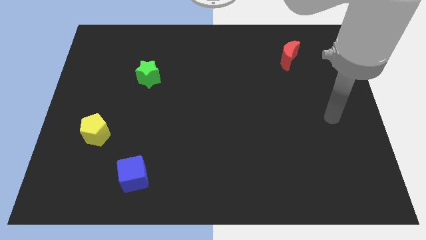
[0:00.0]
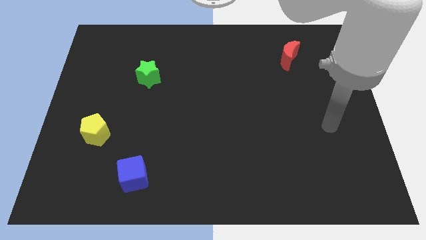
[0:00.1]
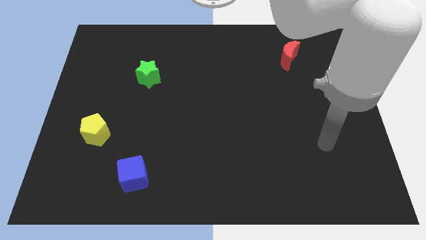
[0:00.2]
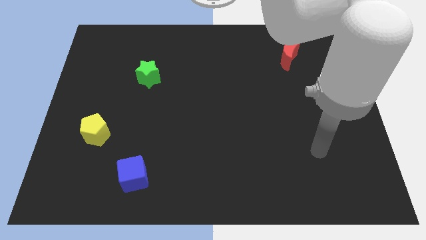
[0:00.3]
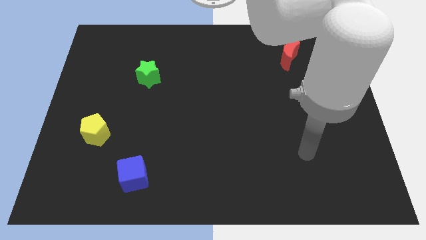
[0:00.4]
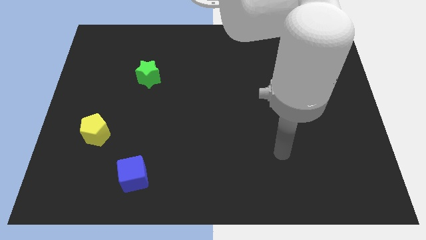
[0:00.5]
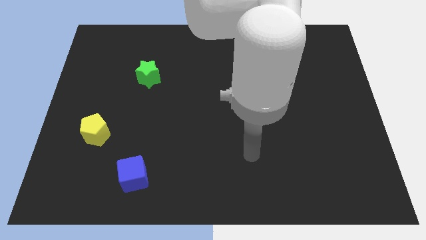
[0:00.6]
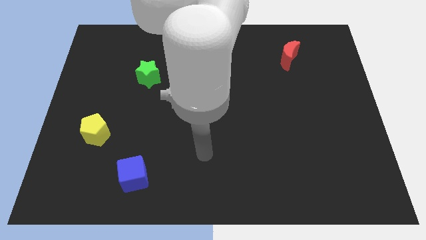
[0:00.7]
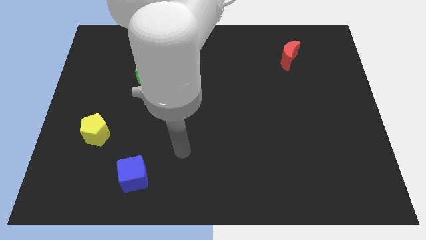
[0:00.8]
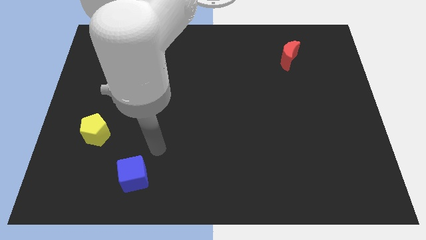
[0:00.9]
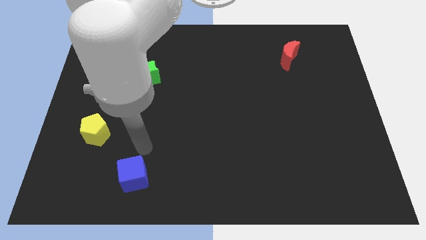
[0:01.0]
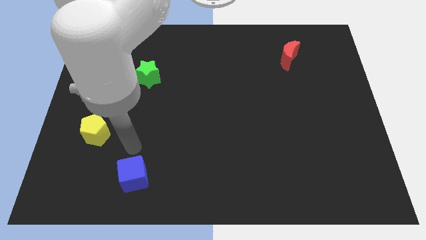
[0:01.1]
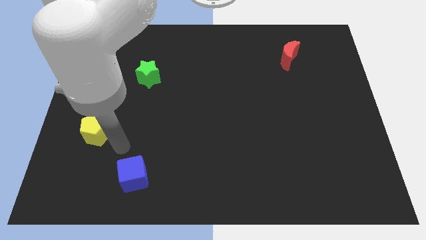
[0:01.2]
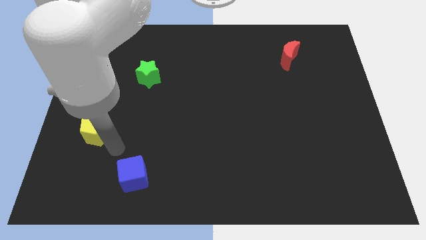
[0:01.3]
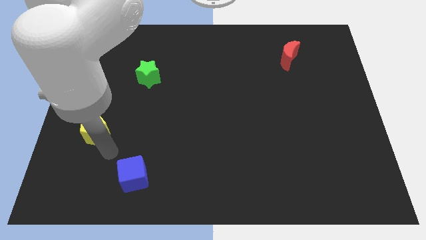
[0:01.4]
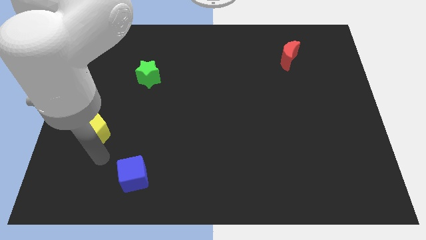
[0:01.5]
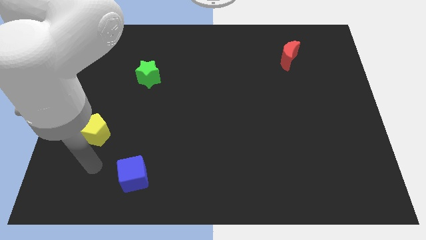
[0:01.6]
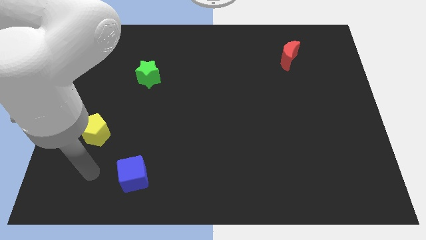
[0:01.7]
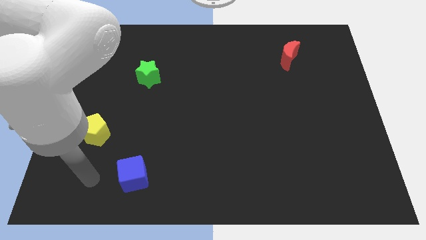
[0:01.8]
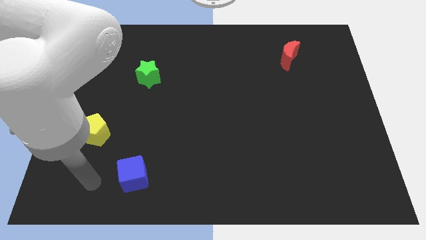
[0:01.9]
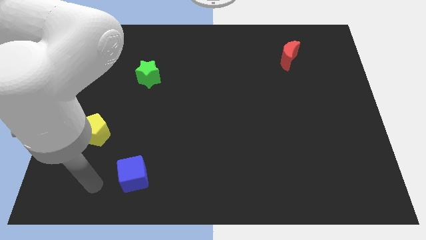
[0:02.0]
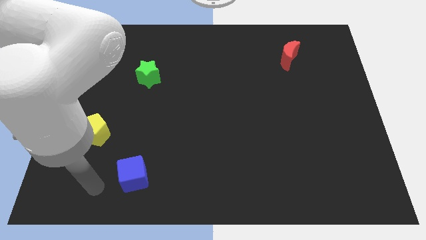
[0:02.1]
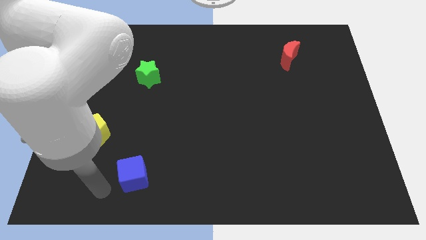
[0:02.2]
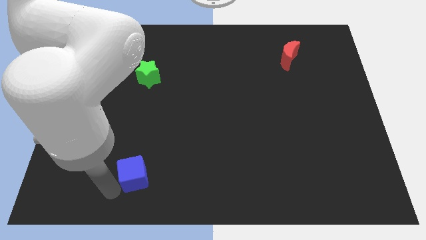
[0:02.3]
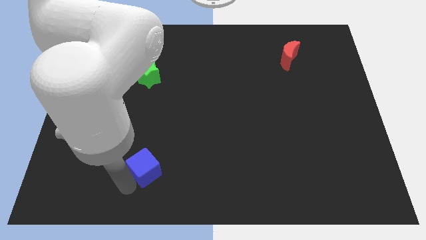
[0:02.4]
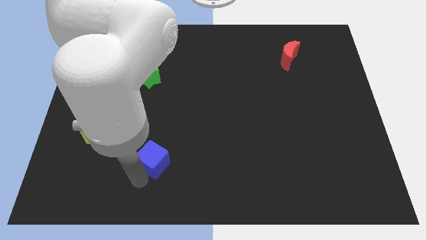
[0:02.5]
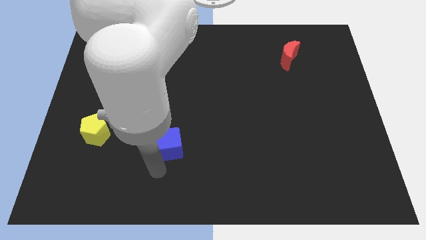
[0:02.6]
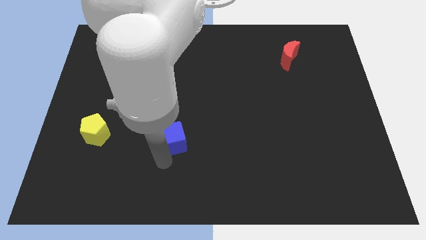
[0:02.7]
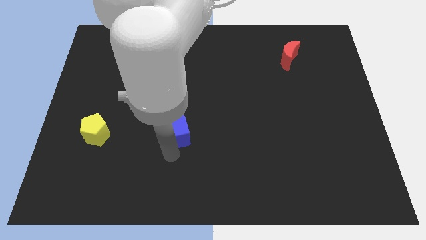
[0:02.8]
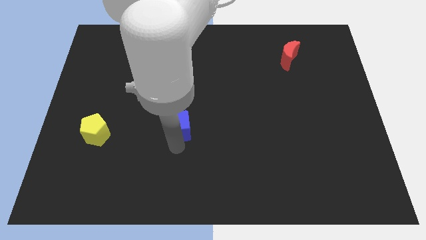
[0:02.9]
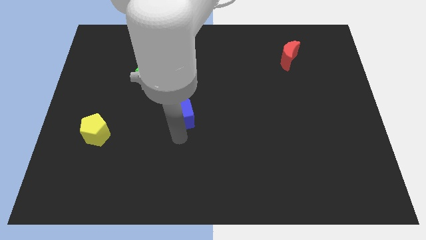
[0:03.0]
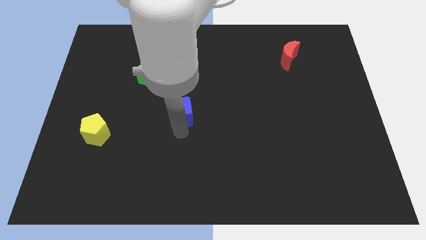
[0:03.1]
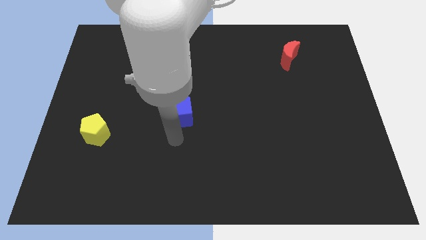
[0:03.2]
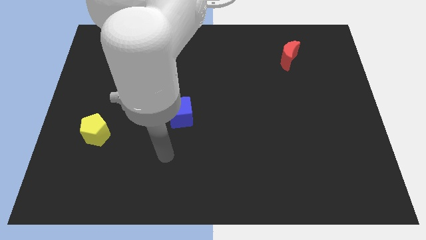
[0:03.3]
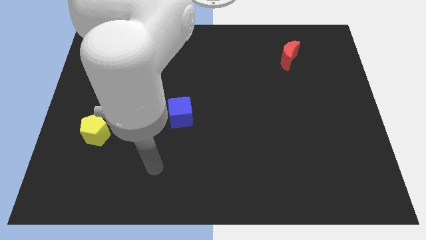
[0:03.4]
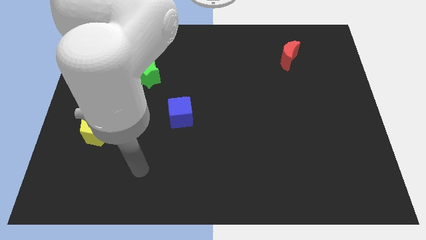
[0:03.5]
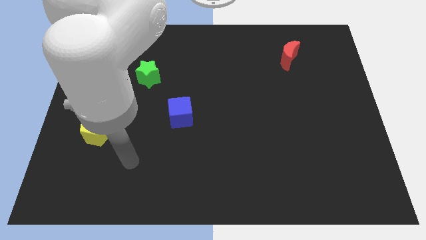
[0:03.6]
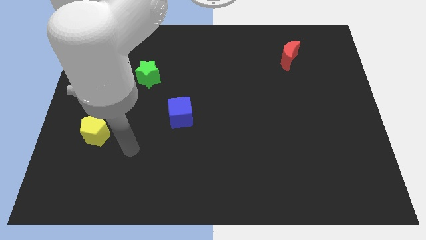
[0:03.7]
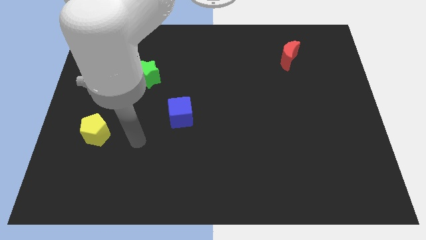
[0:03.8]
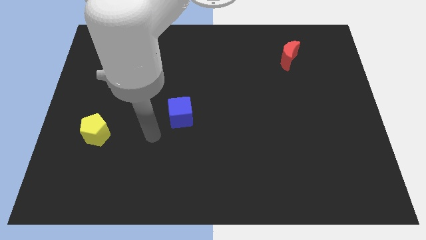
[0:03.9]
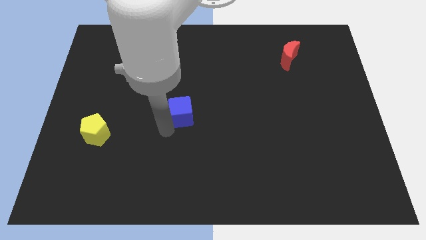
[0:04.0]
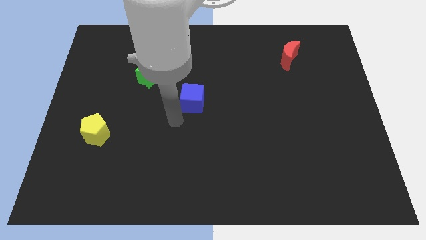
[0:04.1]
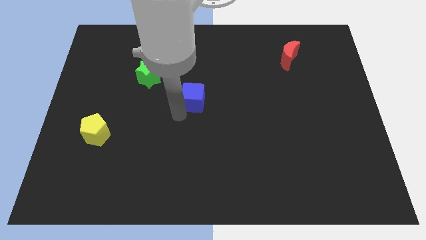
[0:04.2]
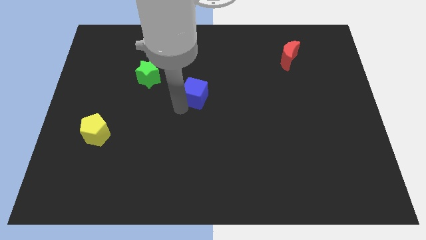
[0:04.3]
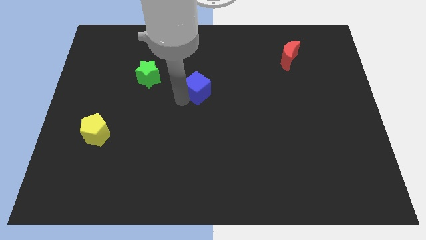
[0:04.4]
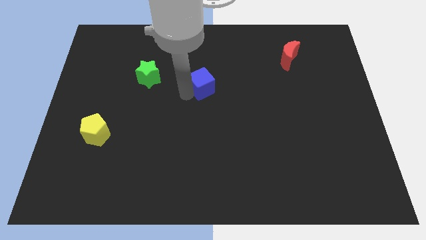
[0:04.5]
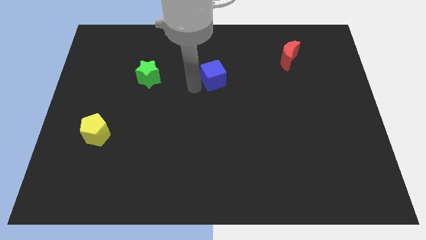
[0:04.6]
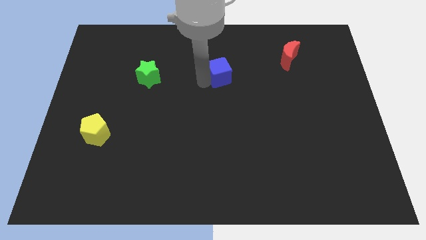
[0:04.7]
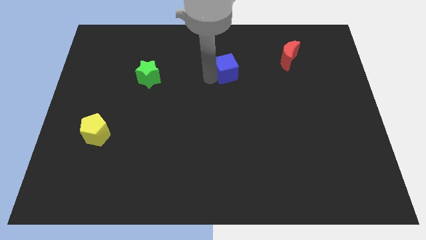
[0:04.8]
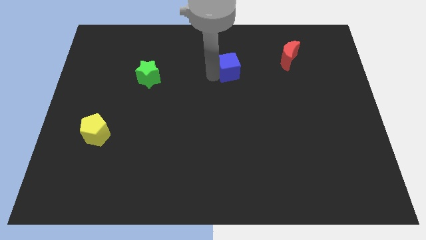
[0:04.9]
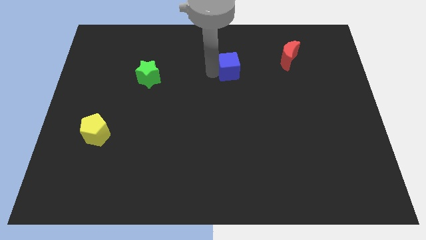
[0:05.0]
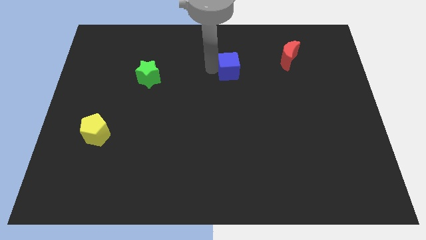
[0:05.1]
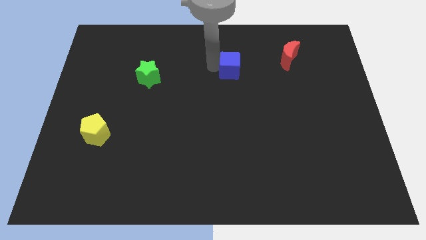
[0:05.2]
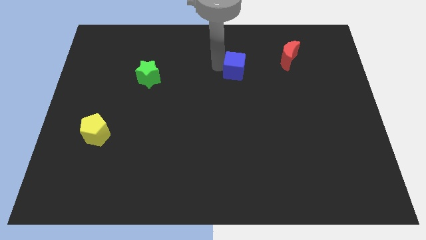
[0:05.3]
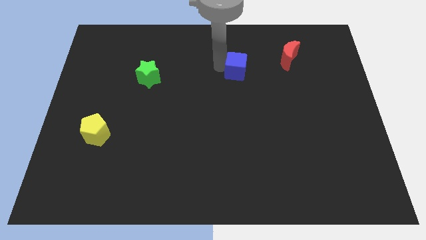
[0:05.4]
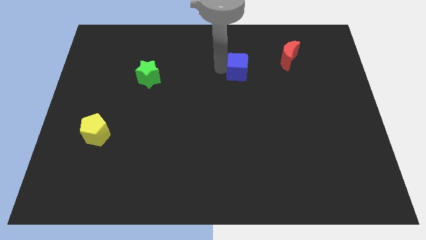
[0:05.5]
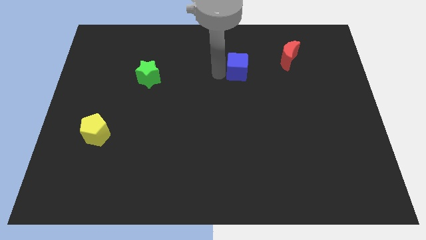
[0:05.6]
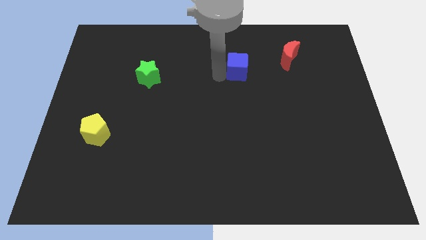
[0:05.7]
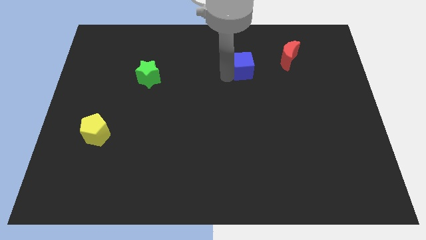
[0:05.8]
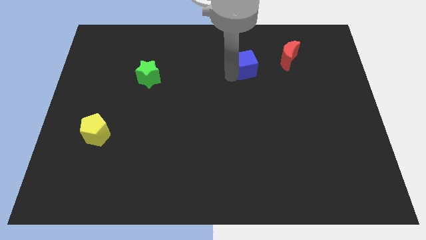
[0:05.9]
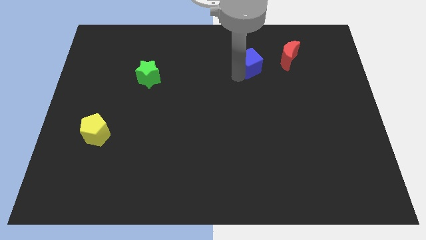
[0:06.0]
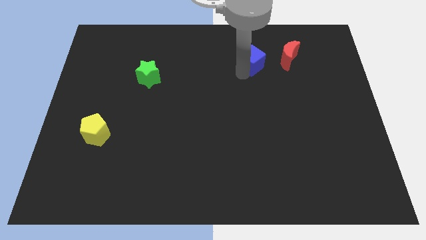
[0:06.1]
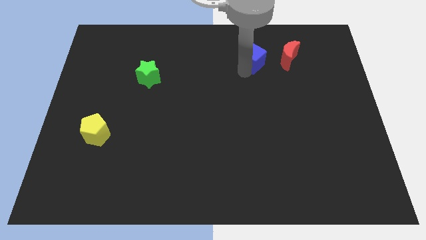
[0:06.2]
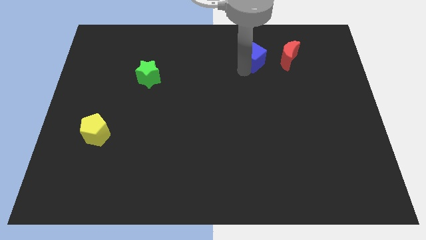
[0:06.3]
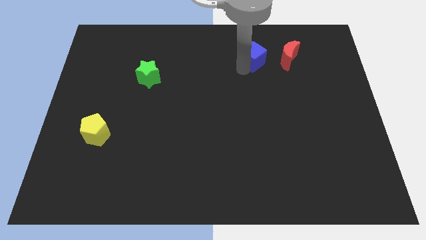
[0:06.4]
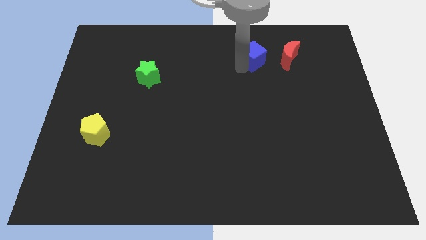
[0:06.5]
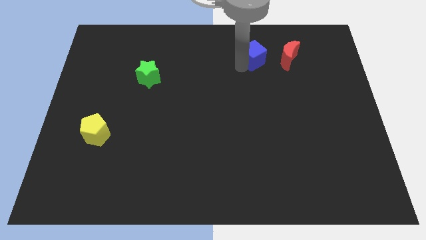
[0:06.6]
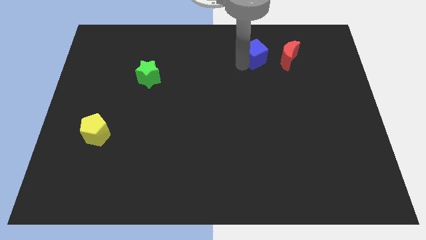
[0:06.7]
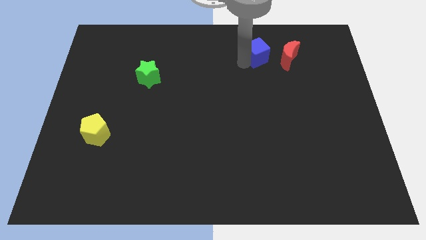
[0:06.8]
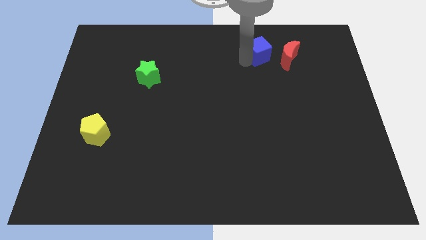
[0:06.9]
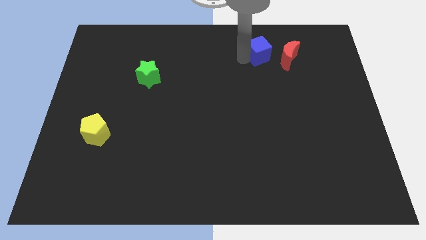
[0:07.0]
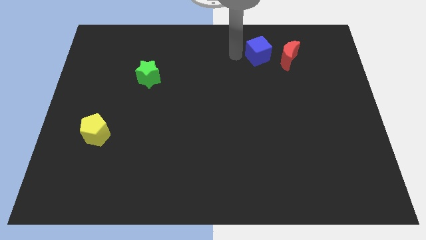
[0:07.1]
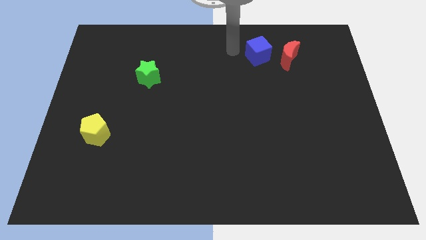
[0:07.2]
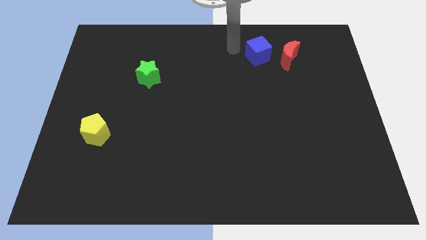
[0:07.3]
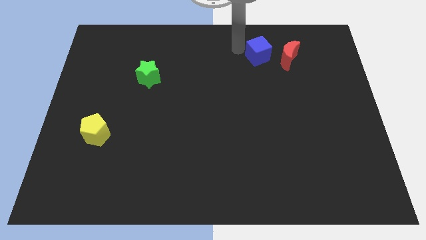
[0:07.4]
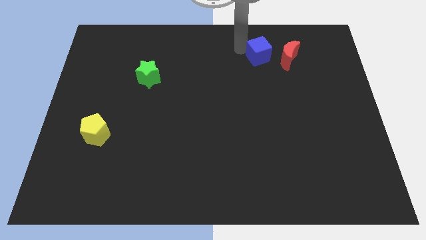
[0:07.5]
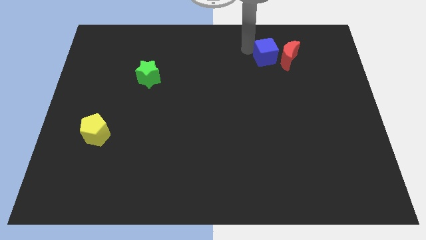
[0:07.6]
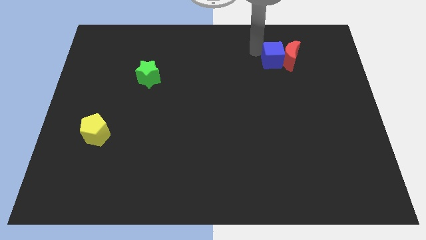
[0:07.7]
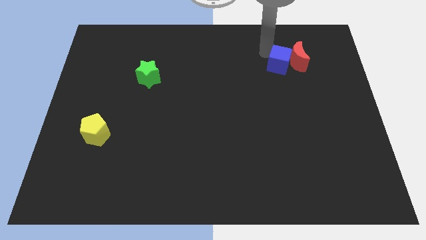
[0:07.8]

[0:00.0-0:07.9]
slide the blue cube close to the red moon

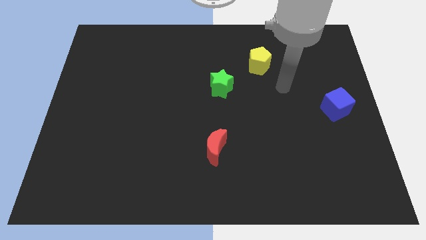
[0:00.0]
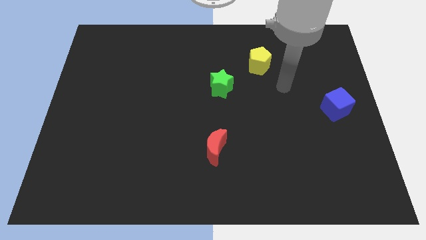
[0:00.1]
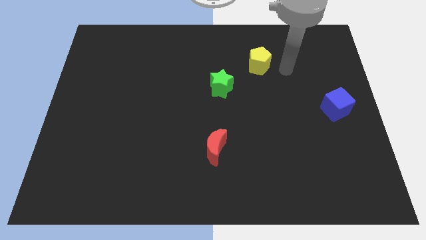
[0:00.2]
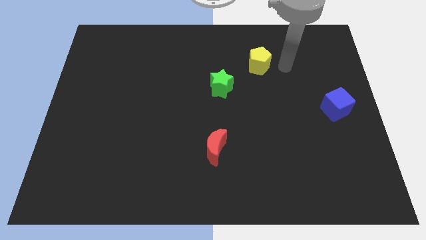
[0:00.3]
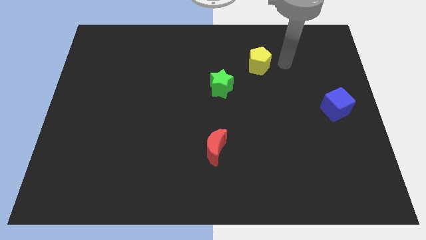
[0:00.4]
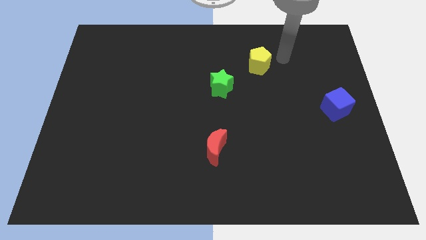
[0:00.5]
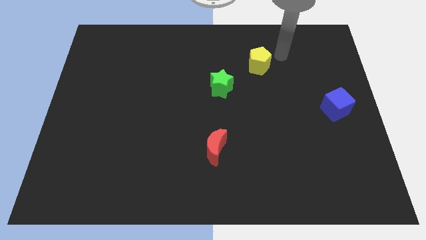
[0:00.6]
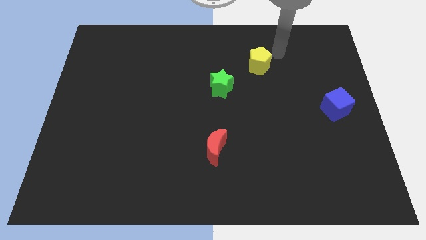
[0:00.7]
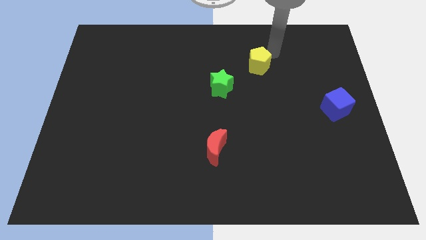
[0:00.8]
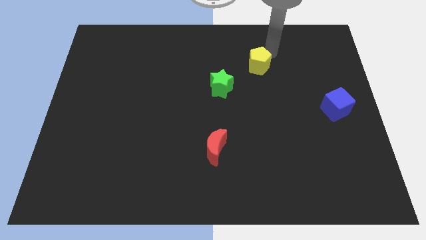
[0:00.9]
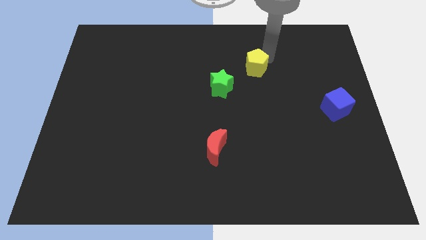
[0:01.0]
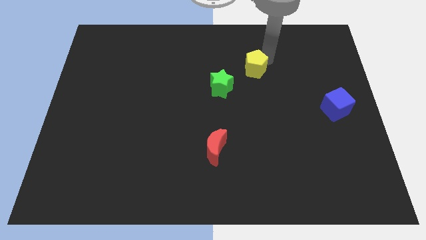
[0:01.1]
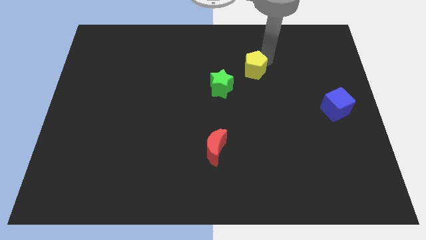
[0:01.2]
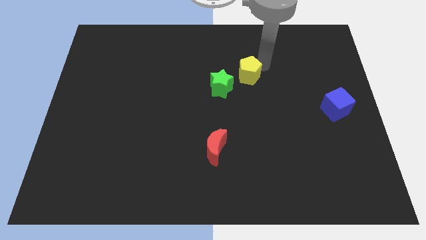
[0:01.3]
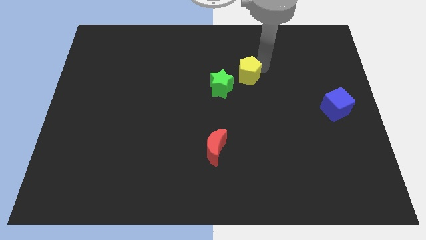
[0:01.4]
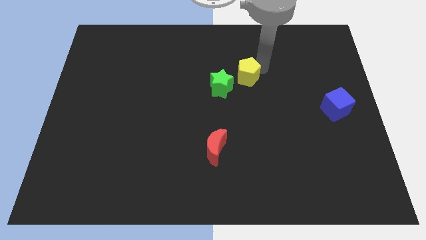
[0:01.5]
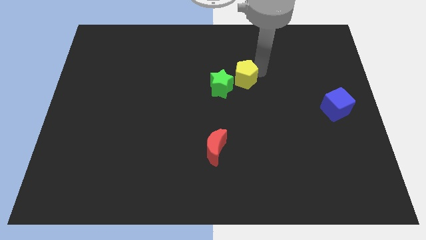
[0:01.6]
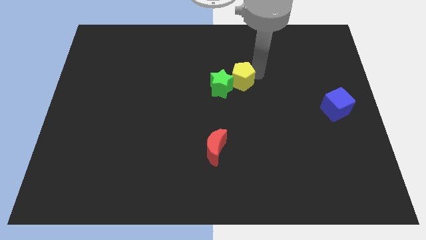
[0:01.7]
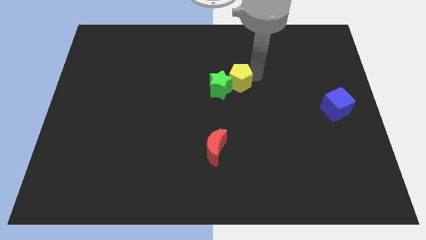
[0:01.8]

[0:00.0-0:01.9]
push the pentagon close to the green star
